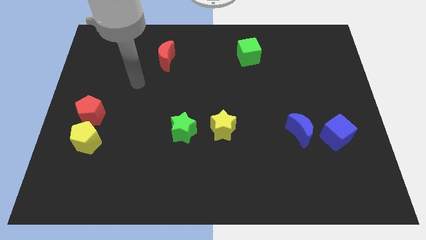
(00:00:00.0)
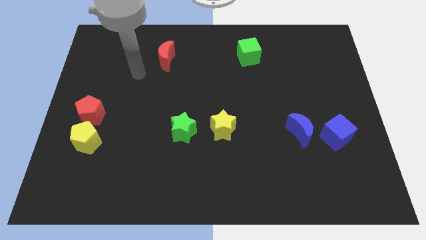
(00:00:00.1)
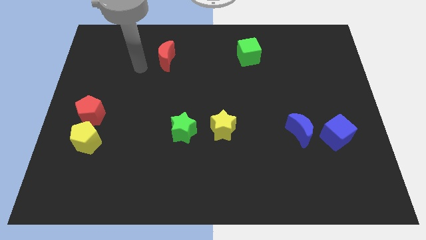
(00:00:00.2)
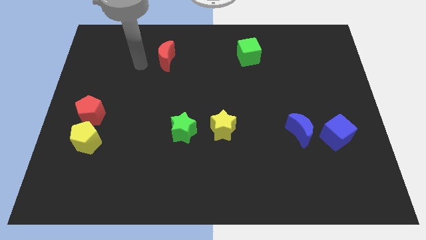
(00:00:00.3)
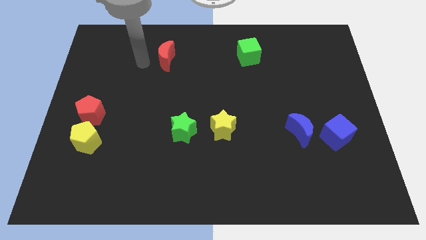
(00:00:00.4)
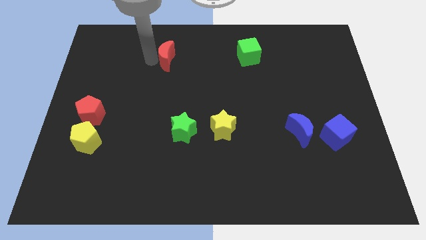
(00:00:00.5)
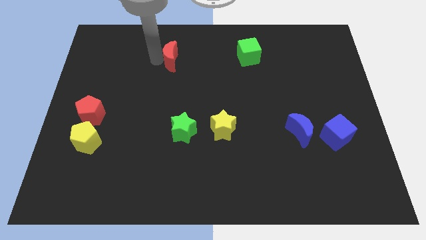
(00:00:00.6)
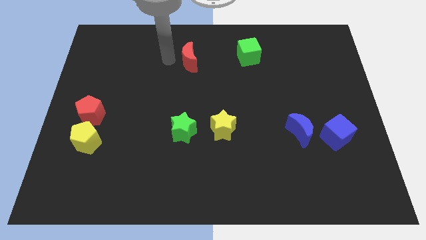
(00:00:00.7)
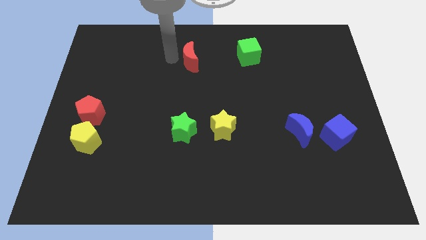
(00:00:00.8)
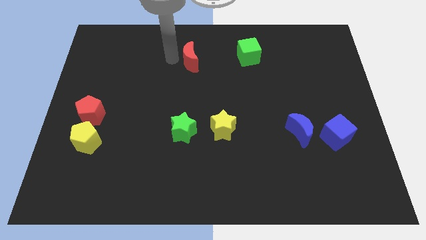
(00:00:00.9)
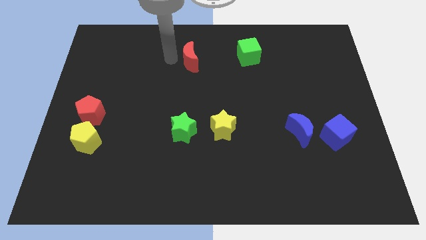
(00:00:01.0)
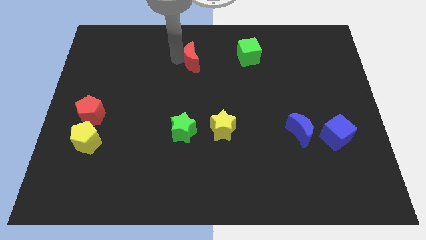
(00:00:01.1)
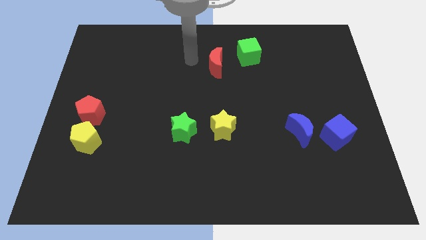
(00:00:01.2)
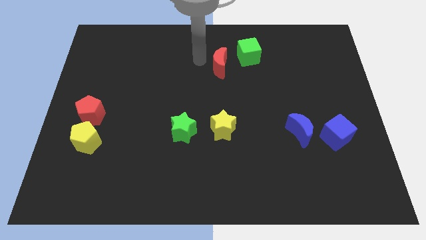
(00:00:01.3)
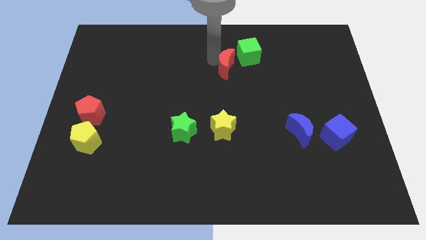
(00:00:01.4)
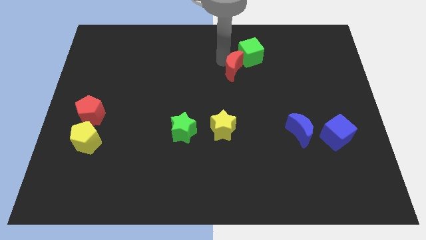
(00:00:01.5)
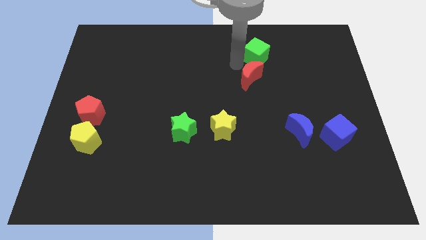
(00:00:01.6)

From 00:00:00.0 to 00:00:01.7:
move the red crescent into the green cube

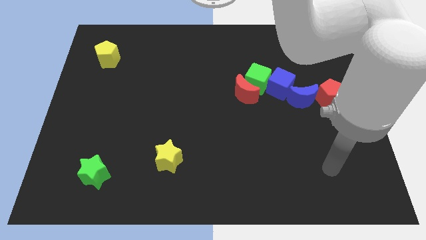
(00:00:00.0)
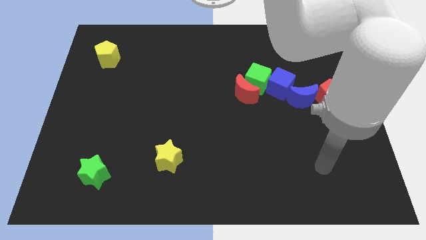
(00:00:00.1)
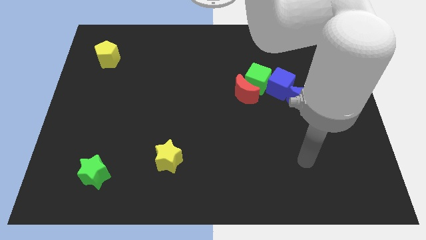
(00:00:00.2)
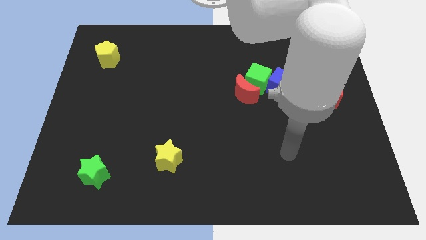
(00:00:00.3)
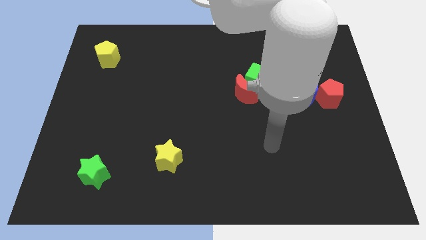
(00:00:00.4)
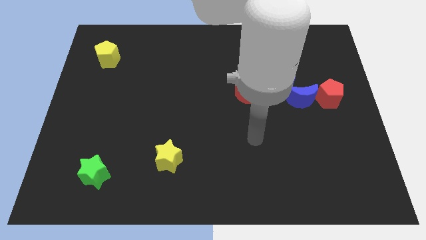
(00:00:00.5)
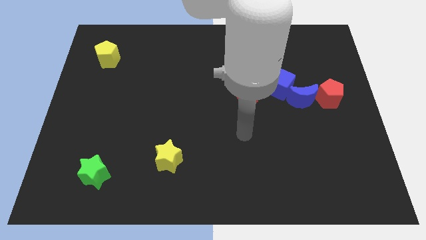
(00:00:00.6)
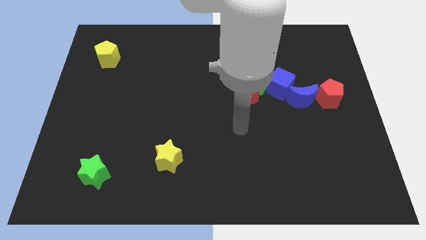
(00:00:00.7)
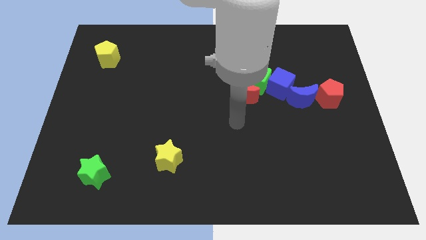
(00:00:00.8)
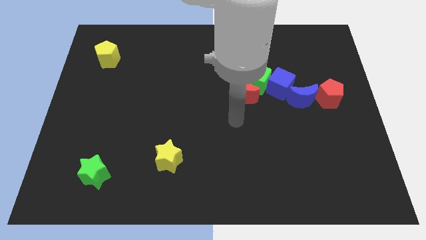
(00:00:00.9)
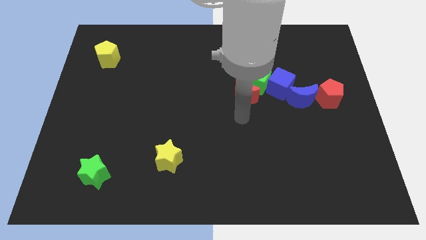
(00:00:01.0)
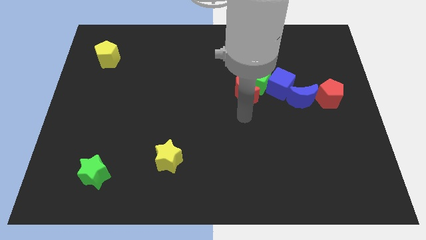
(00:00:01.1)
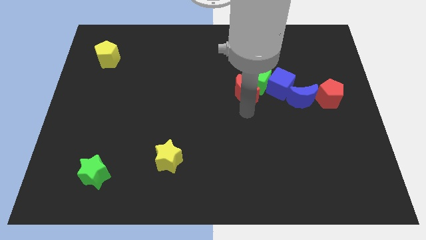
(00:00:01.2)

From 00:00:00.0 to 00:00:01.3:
point your arm at the bottom side of the red moon

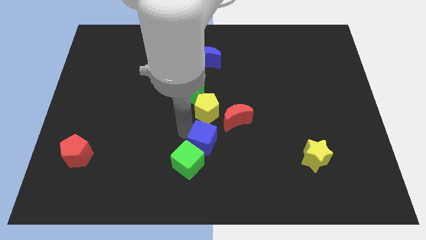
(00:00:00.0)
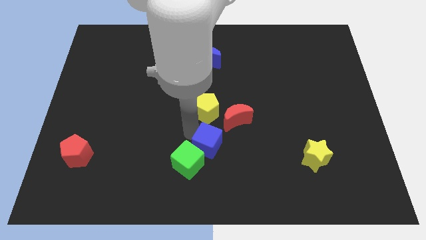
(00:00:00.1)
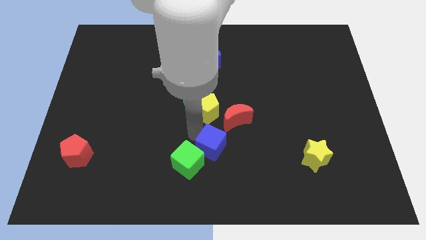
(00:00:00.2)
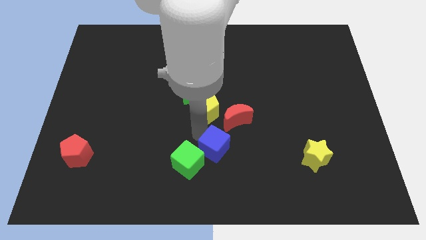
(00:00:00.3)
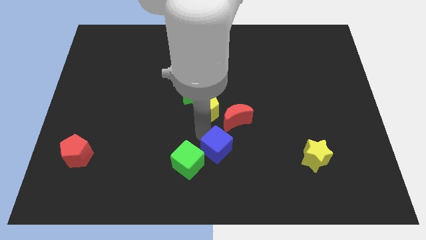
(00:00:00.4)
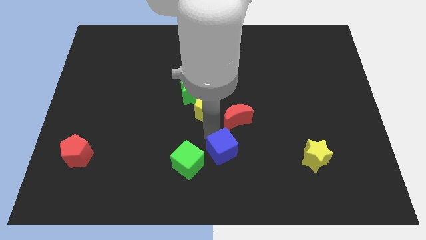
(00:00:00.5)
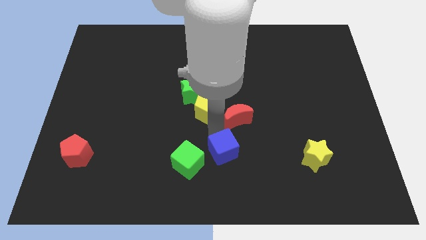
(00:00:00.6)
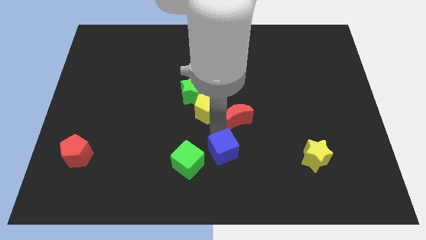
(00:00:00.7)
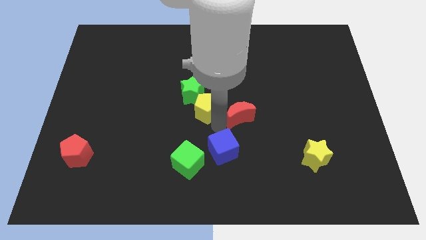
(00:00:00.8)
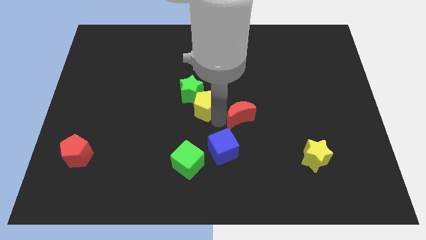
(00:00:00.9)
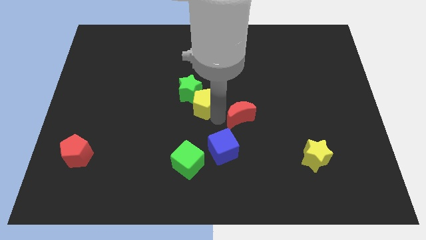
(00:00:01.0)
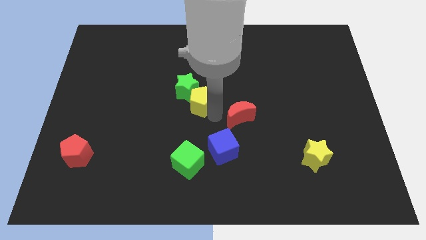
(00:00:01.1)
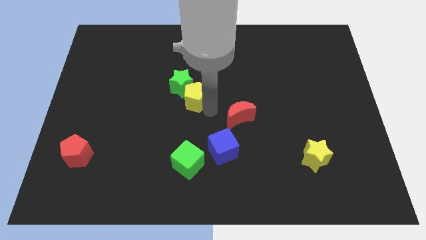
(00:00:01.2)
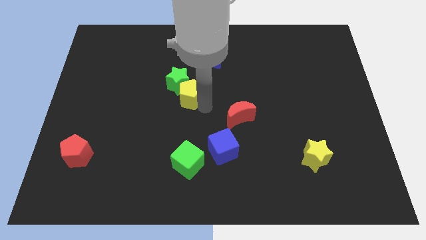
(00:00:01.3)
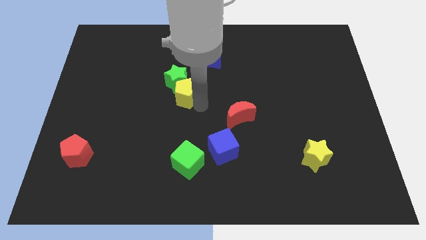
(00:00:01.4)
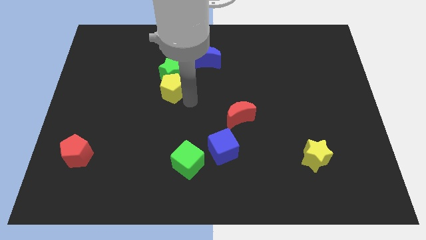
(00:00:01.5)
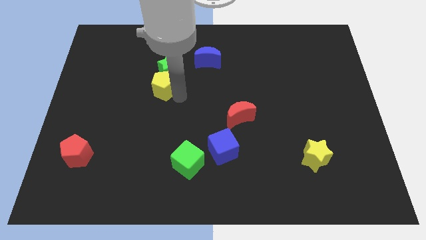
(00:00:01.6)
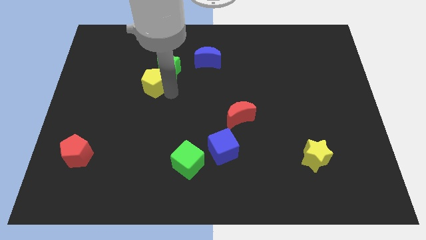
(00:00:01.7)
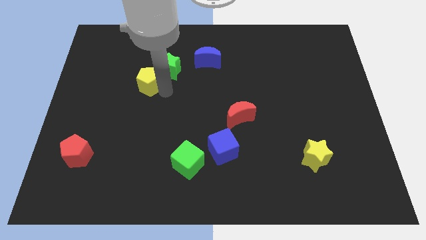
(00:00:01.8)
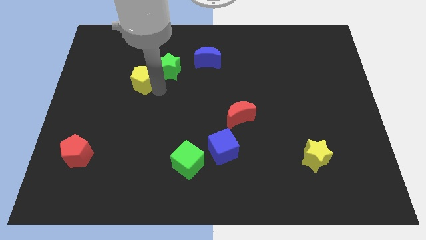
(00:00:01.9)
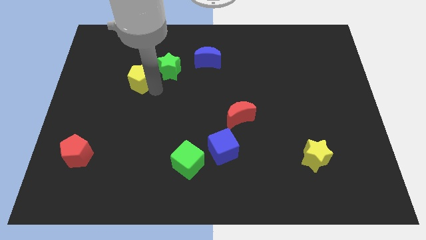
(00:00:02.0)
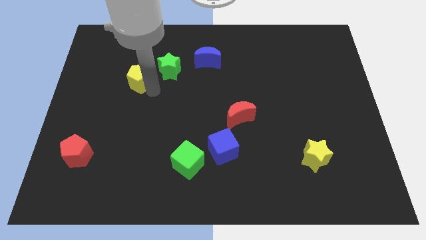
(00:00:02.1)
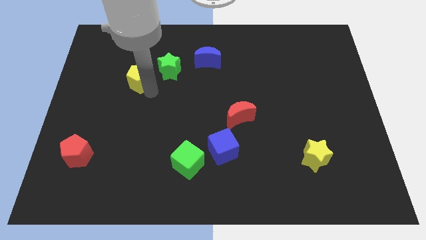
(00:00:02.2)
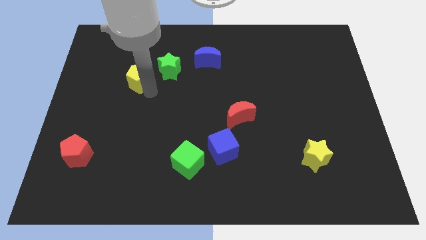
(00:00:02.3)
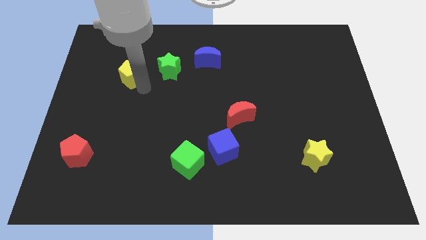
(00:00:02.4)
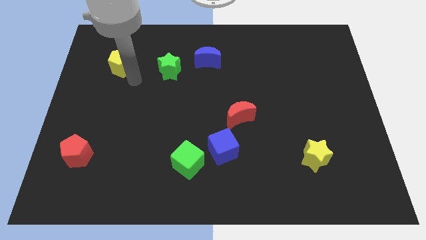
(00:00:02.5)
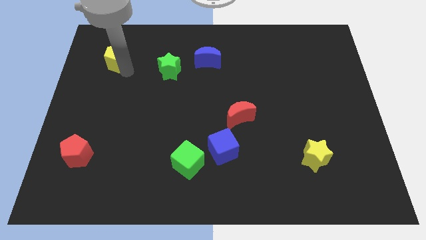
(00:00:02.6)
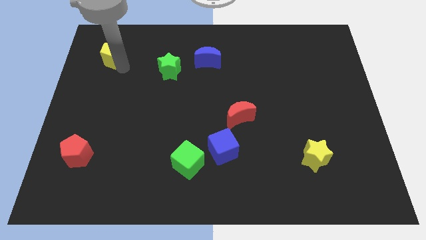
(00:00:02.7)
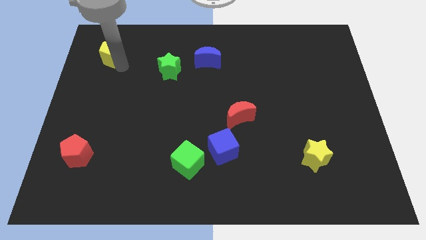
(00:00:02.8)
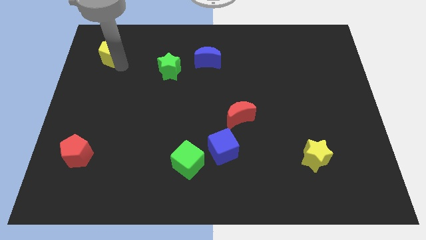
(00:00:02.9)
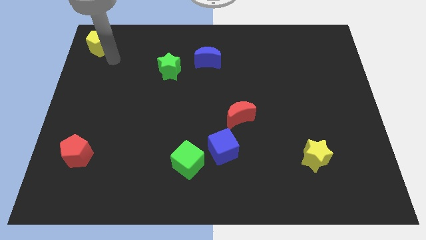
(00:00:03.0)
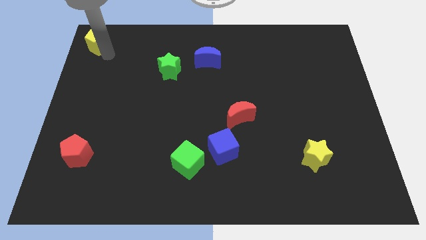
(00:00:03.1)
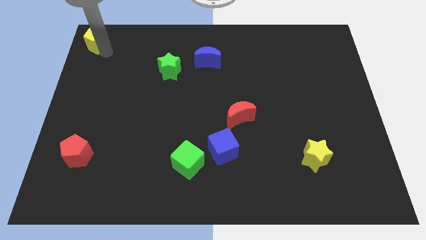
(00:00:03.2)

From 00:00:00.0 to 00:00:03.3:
place the yellow pentagon to the top left corner of the board

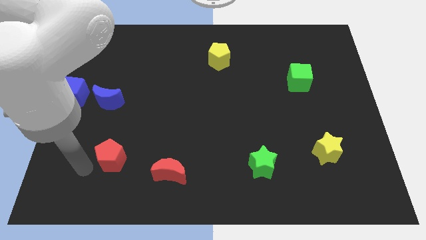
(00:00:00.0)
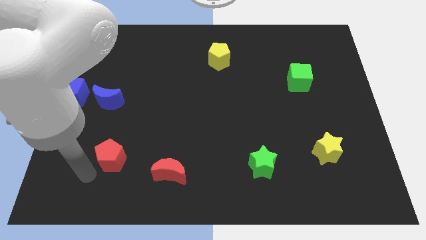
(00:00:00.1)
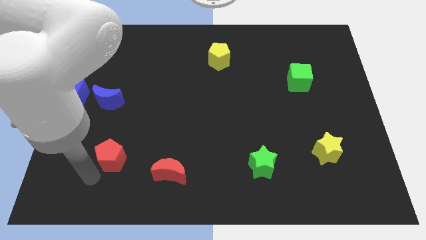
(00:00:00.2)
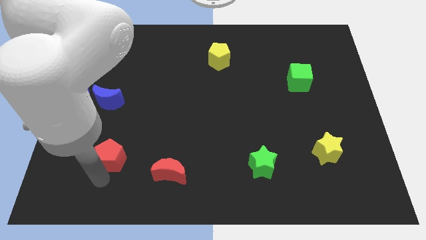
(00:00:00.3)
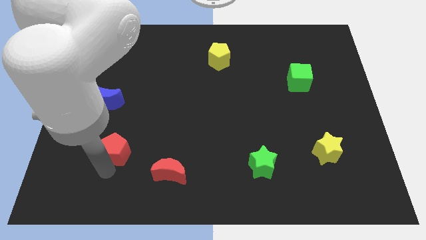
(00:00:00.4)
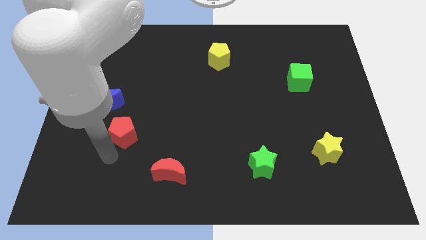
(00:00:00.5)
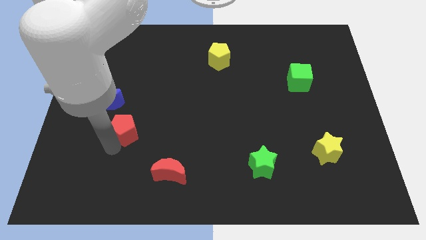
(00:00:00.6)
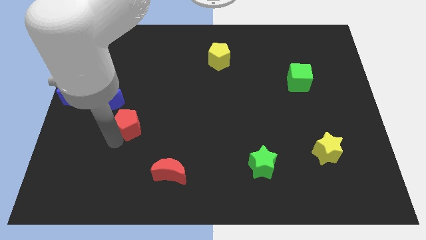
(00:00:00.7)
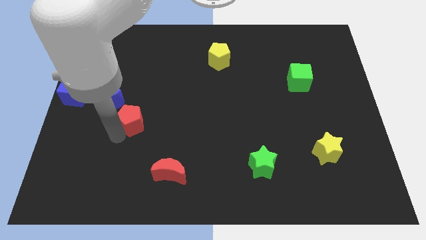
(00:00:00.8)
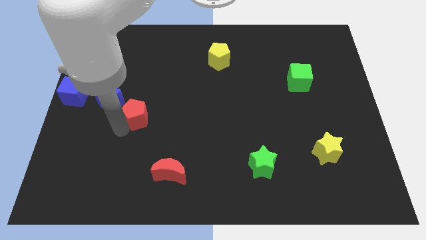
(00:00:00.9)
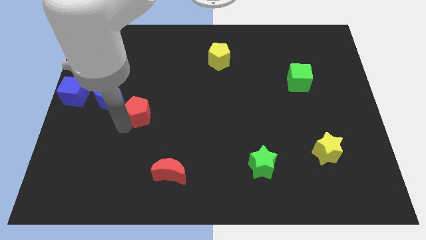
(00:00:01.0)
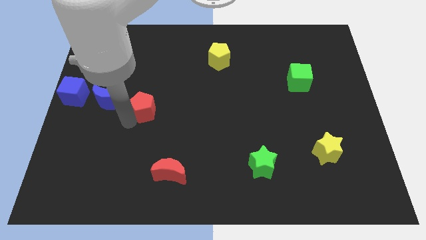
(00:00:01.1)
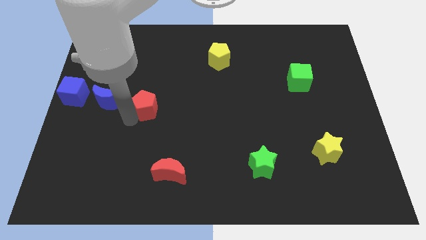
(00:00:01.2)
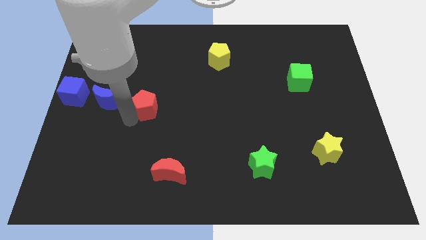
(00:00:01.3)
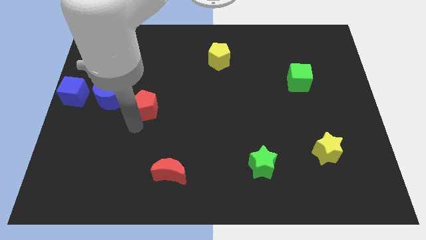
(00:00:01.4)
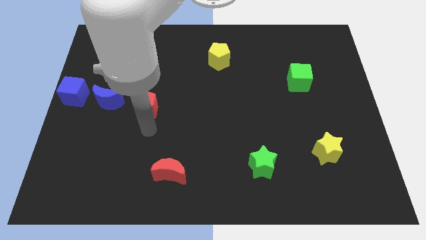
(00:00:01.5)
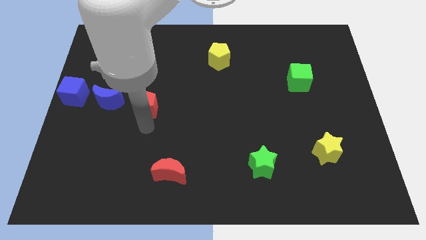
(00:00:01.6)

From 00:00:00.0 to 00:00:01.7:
move the red pentagon to the right side of the blue moon

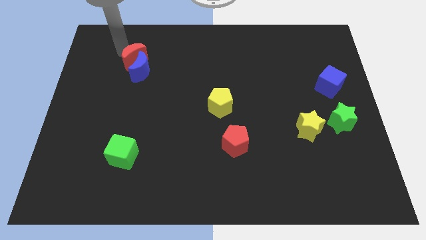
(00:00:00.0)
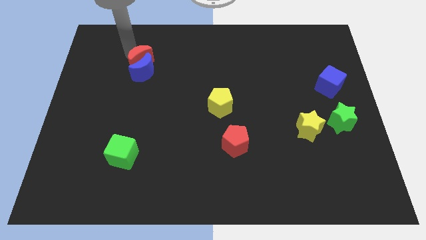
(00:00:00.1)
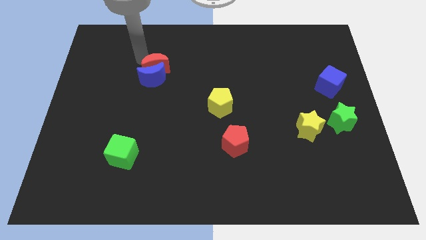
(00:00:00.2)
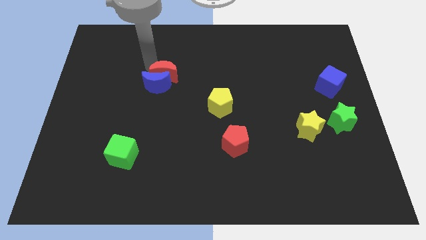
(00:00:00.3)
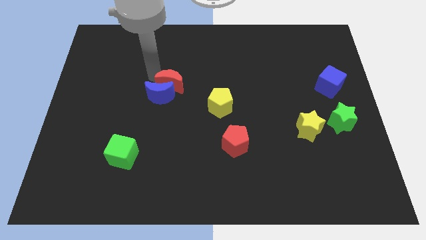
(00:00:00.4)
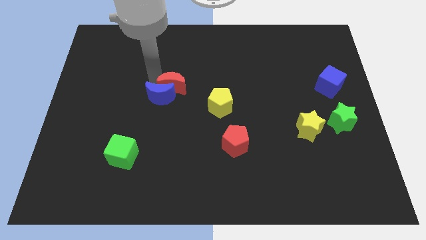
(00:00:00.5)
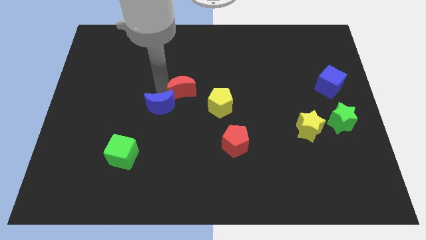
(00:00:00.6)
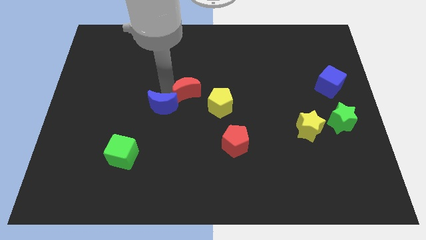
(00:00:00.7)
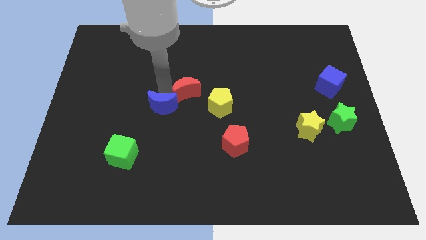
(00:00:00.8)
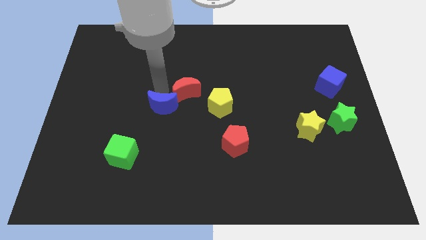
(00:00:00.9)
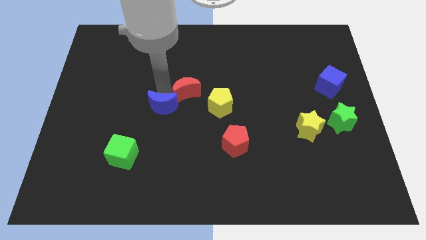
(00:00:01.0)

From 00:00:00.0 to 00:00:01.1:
move the red and blue crescents towards the left side of the yellow pentagon
